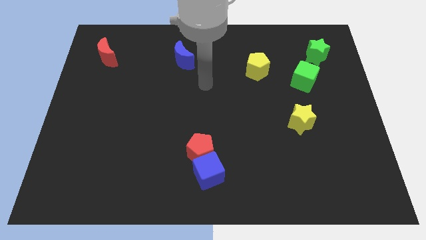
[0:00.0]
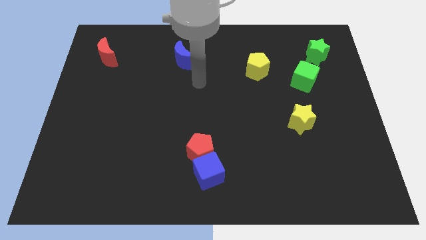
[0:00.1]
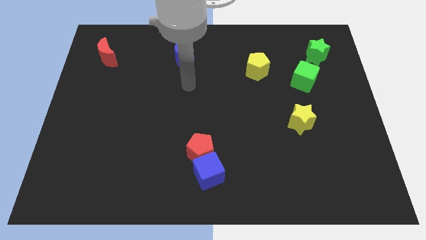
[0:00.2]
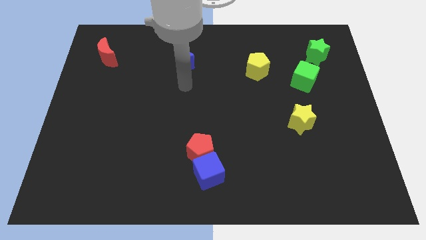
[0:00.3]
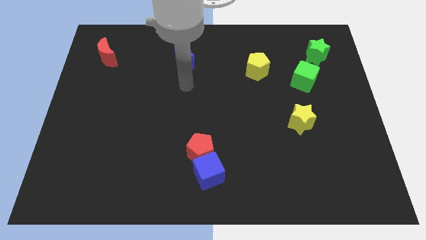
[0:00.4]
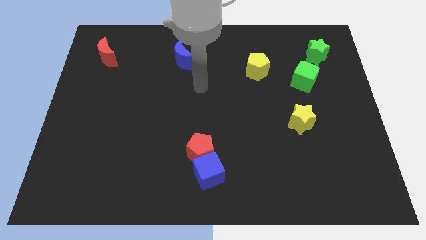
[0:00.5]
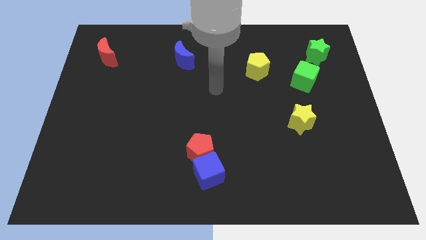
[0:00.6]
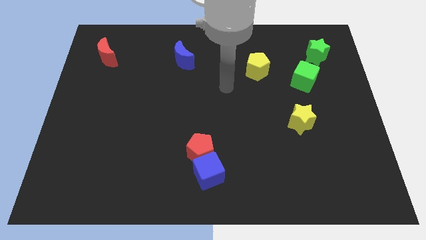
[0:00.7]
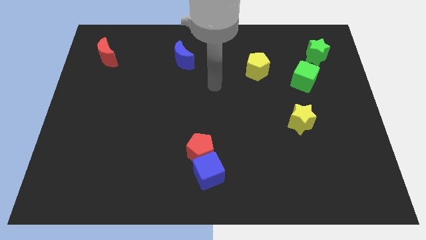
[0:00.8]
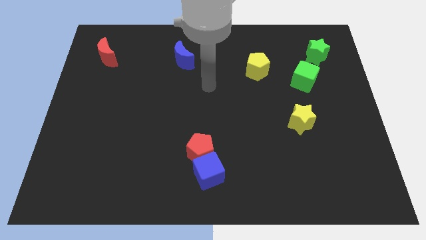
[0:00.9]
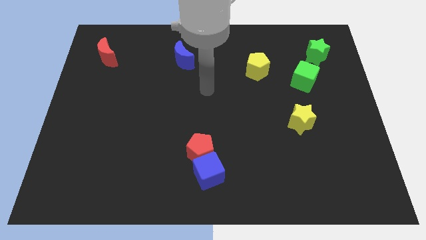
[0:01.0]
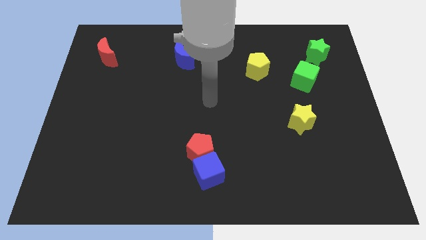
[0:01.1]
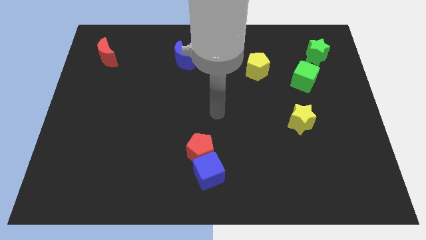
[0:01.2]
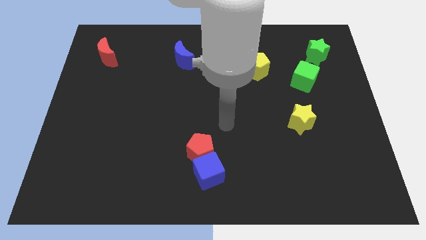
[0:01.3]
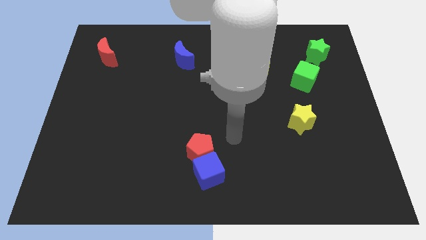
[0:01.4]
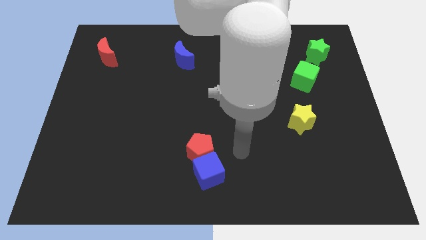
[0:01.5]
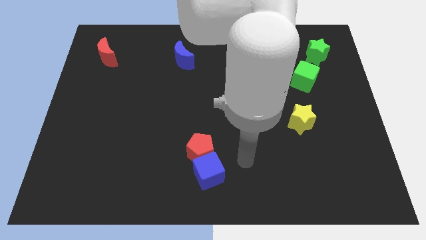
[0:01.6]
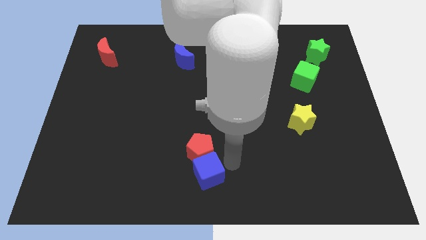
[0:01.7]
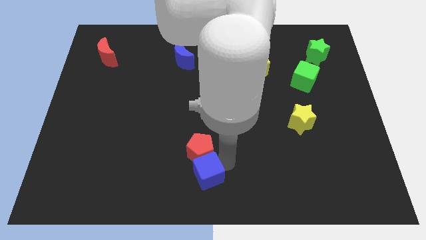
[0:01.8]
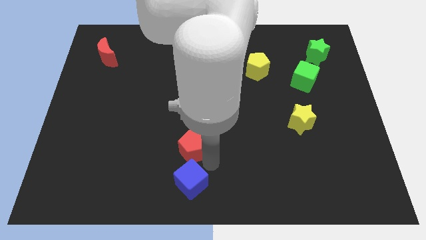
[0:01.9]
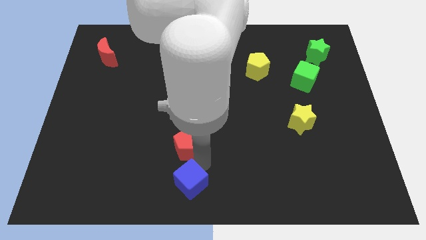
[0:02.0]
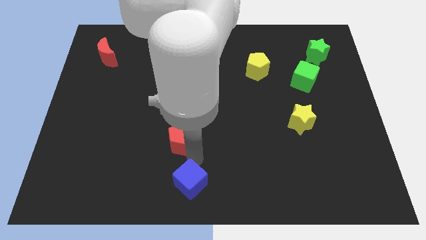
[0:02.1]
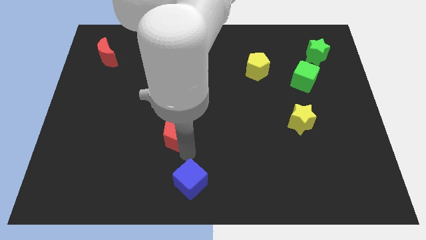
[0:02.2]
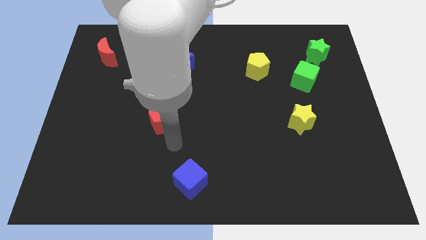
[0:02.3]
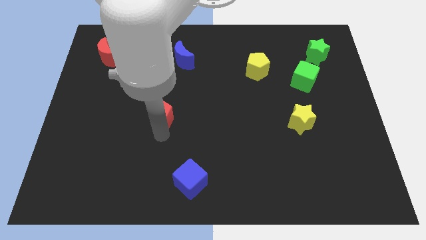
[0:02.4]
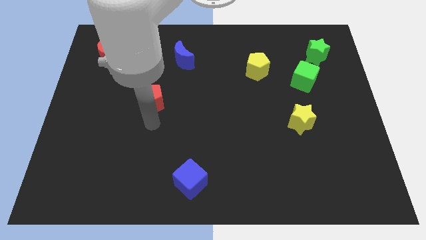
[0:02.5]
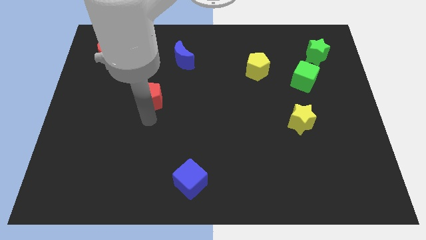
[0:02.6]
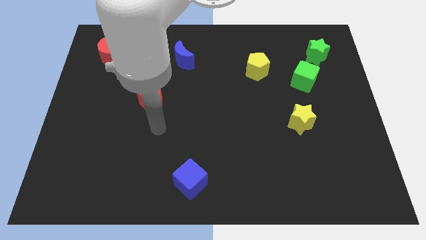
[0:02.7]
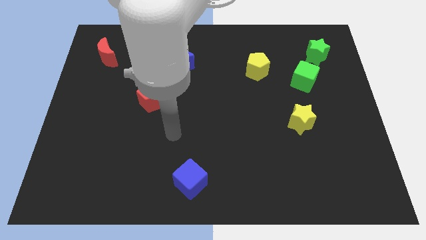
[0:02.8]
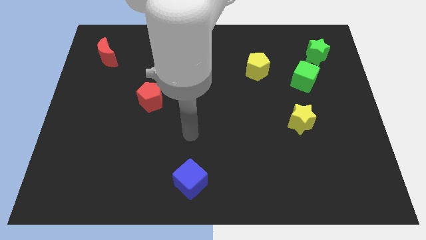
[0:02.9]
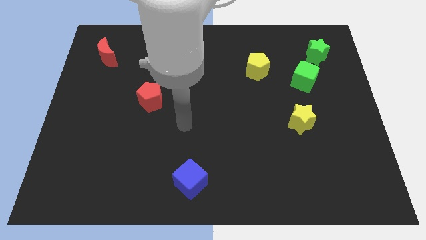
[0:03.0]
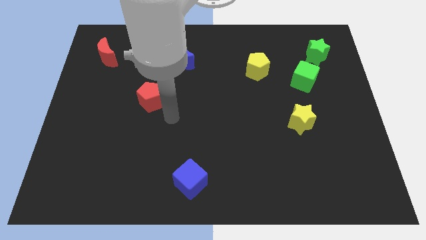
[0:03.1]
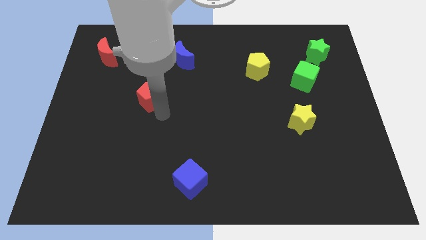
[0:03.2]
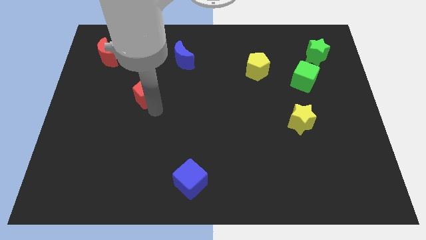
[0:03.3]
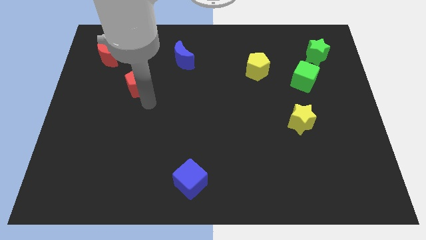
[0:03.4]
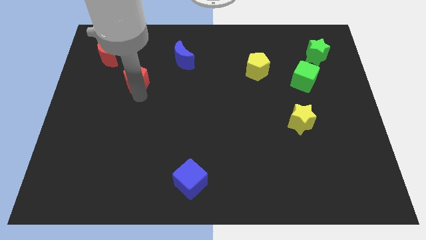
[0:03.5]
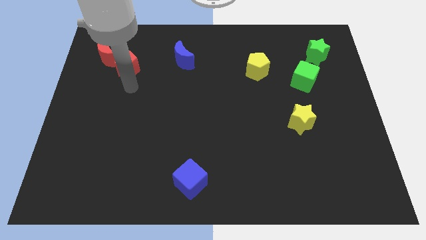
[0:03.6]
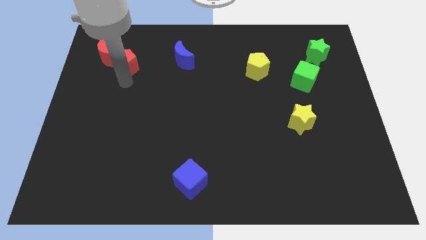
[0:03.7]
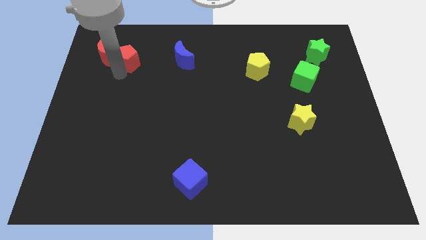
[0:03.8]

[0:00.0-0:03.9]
separate the red pentagon from the blue cube

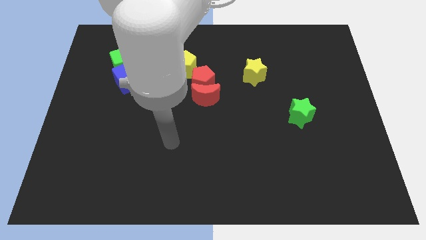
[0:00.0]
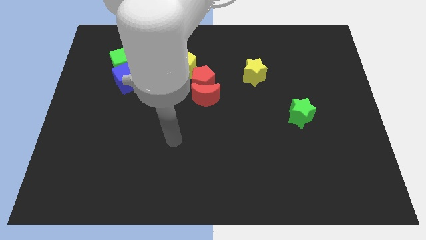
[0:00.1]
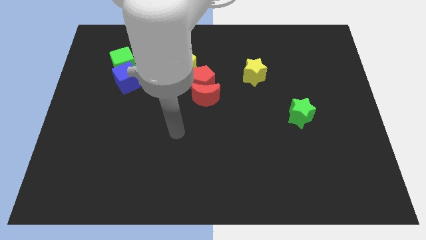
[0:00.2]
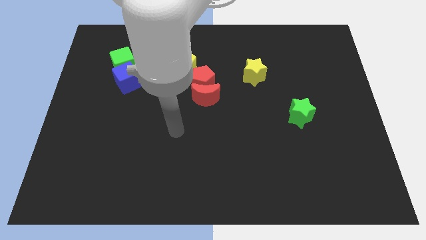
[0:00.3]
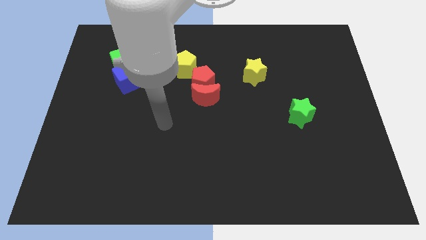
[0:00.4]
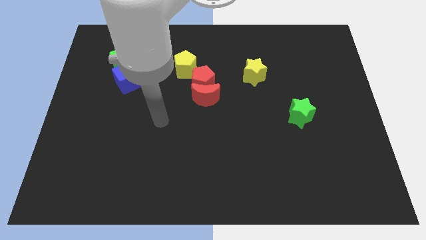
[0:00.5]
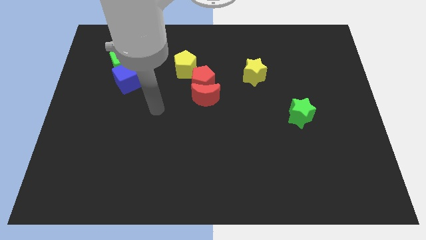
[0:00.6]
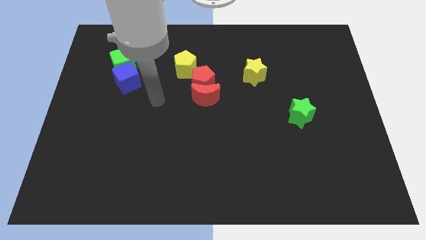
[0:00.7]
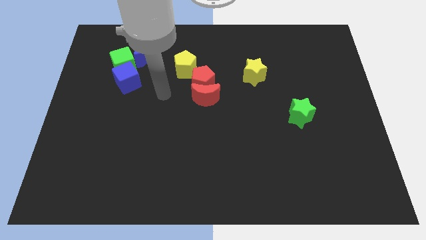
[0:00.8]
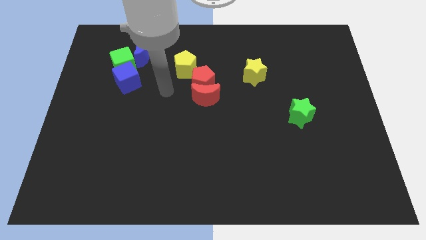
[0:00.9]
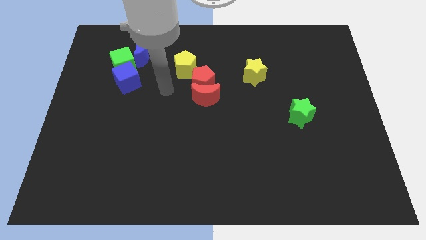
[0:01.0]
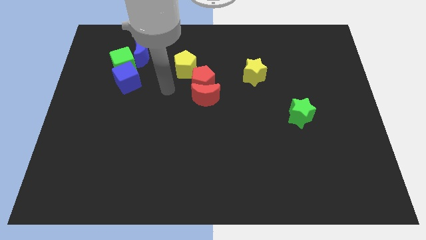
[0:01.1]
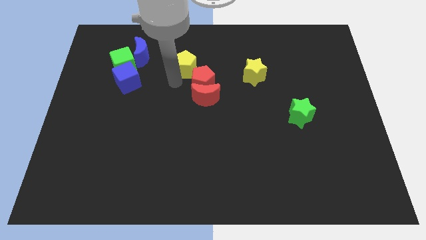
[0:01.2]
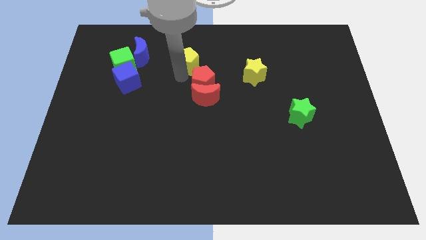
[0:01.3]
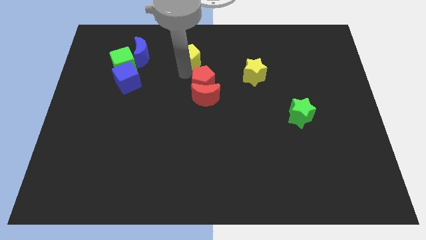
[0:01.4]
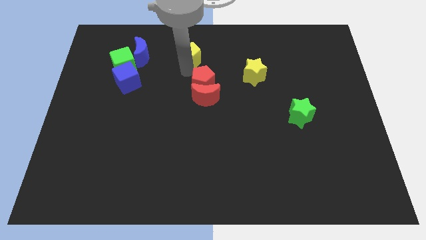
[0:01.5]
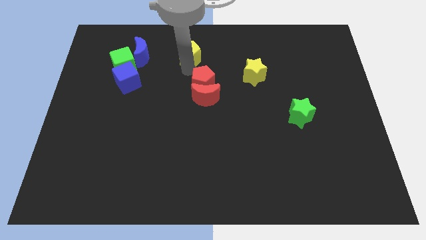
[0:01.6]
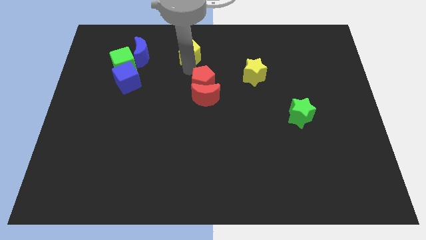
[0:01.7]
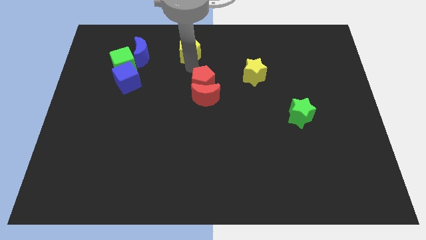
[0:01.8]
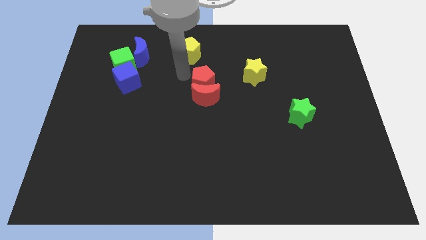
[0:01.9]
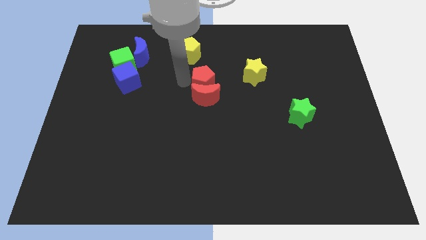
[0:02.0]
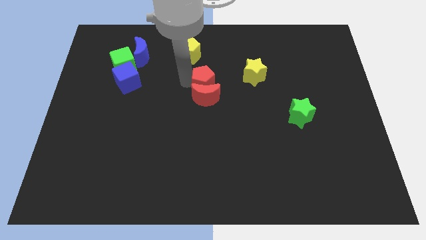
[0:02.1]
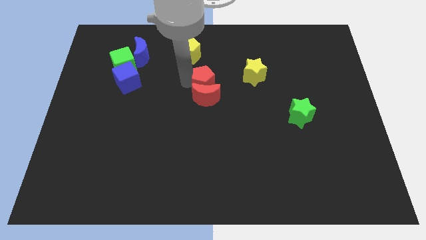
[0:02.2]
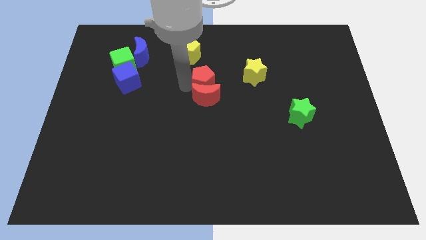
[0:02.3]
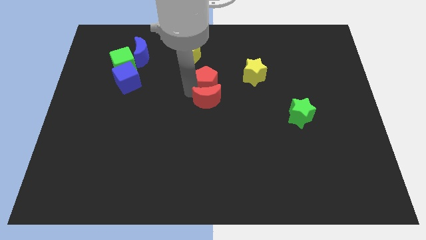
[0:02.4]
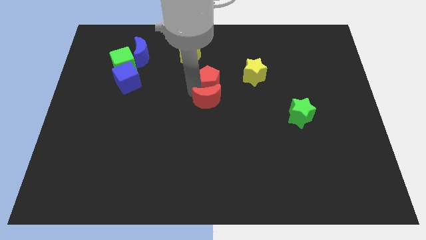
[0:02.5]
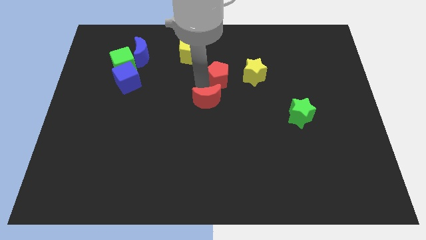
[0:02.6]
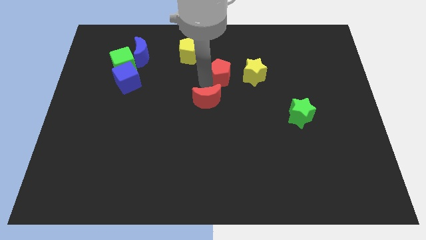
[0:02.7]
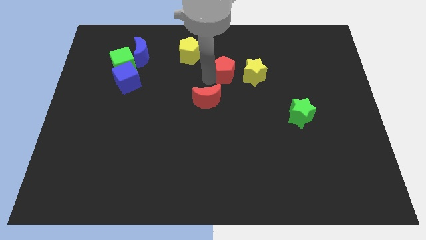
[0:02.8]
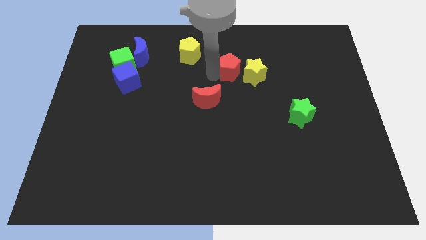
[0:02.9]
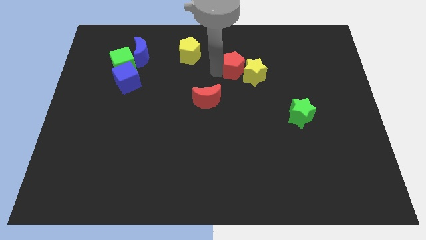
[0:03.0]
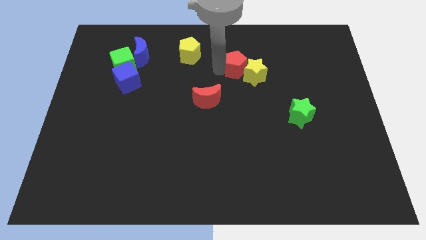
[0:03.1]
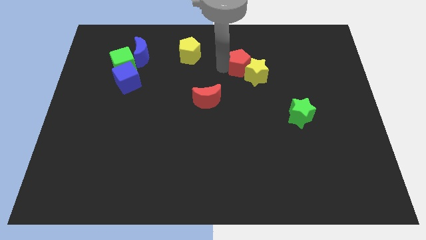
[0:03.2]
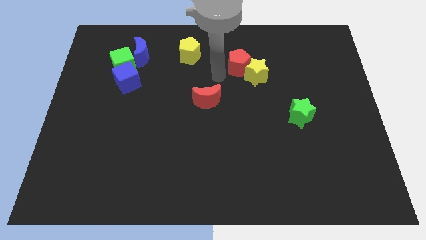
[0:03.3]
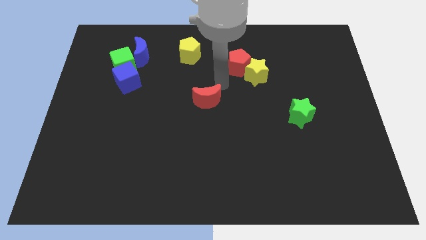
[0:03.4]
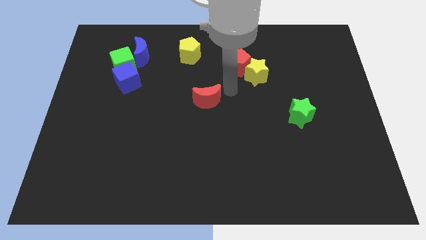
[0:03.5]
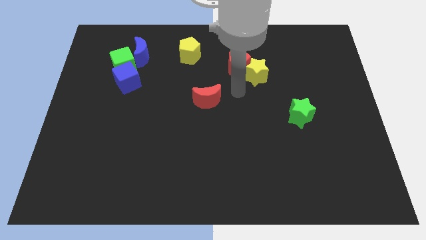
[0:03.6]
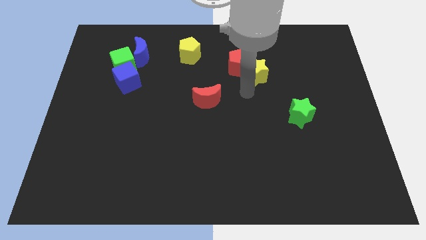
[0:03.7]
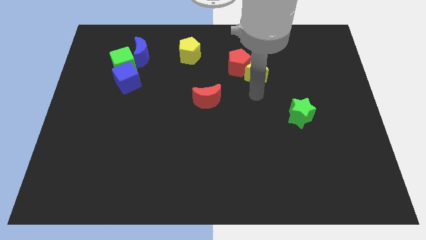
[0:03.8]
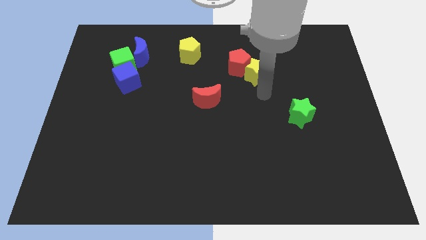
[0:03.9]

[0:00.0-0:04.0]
separate the yellow and red pentagons from the red crescent

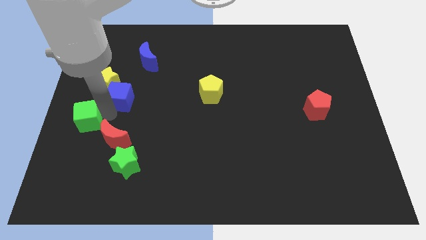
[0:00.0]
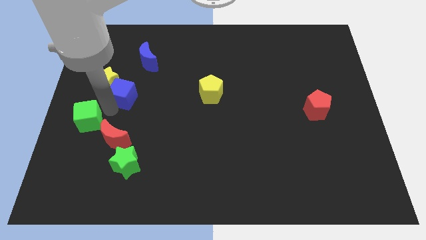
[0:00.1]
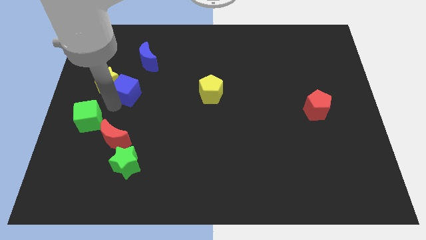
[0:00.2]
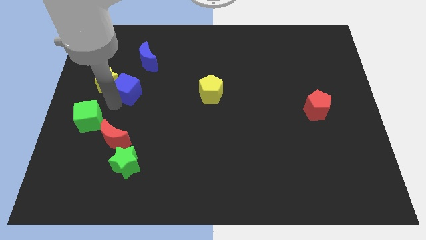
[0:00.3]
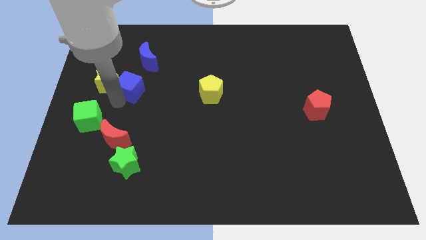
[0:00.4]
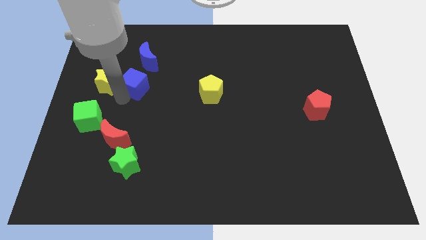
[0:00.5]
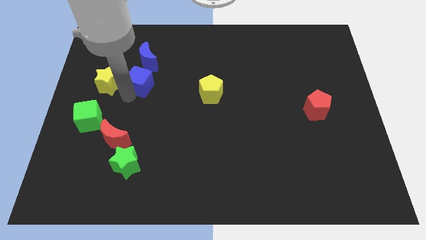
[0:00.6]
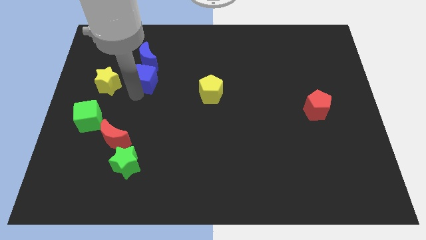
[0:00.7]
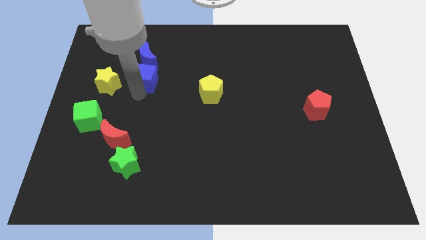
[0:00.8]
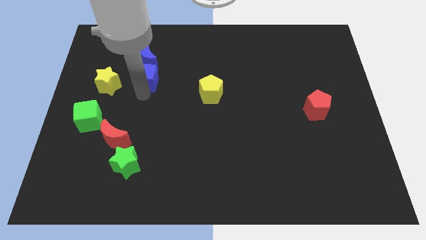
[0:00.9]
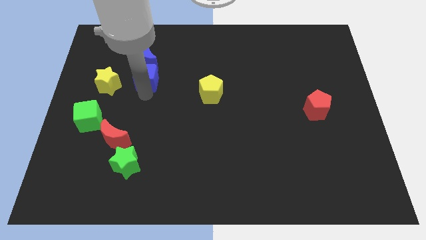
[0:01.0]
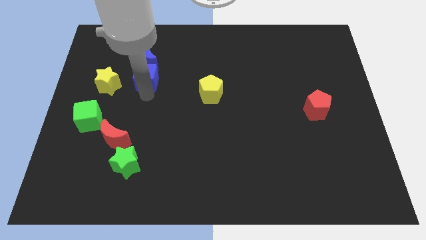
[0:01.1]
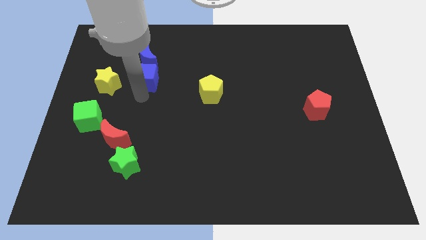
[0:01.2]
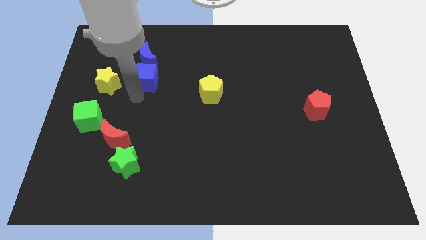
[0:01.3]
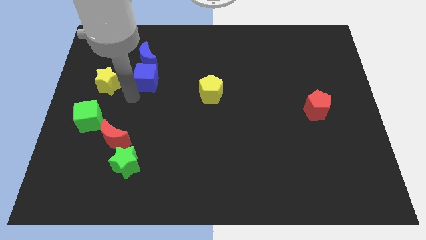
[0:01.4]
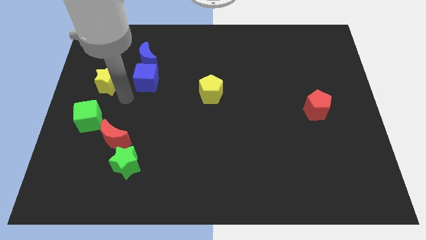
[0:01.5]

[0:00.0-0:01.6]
place the blue cube below the blue crescent
